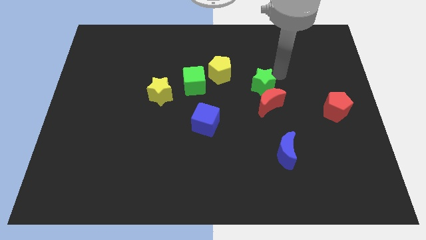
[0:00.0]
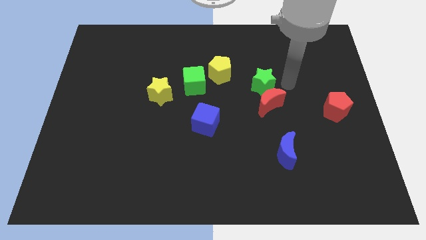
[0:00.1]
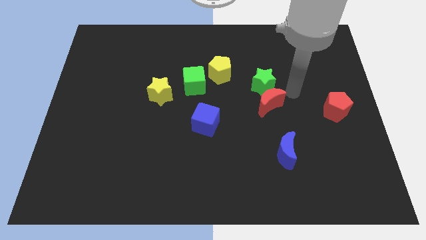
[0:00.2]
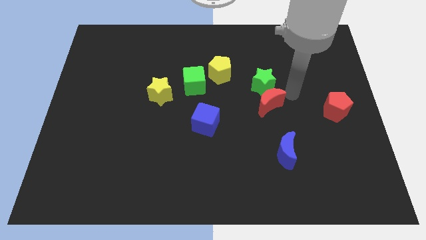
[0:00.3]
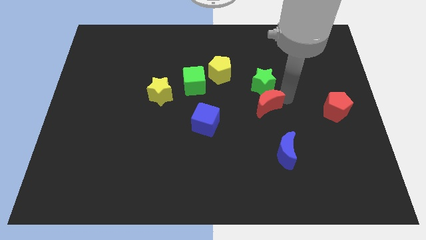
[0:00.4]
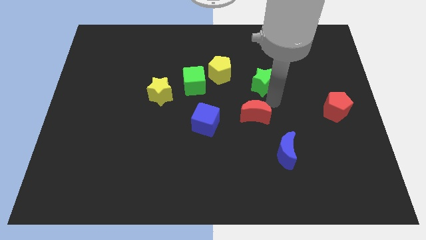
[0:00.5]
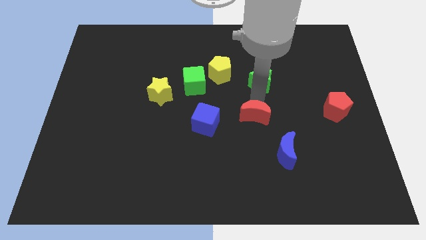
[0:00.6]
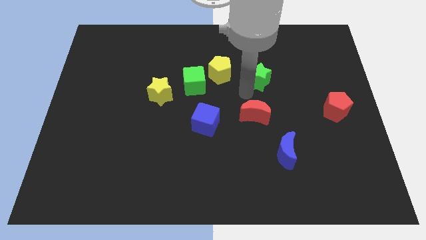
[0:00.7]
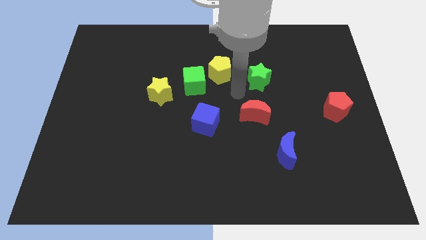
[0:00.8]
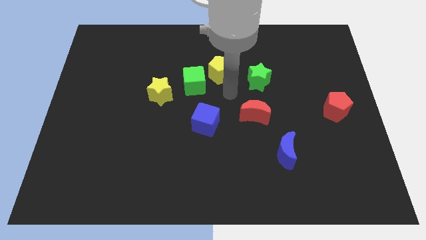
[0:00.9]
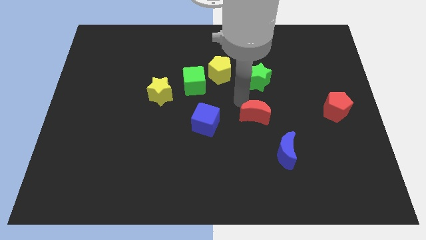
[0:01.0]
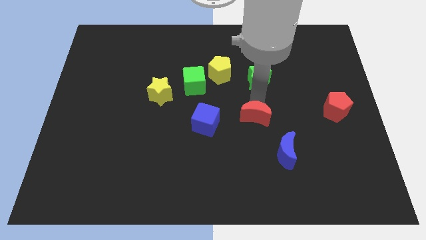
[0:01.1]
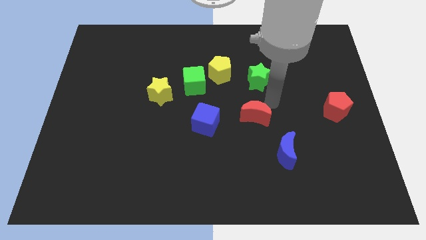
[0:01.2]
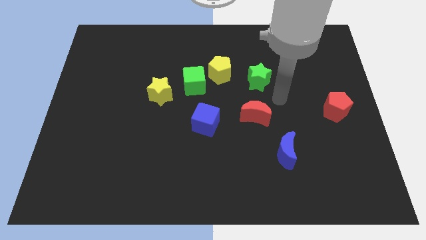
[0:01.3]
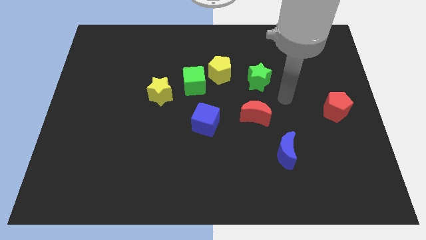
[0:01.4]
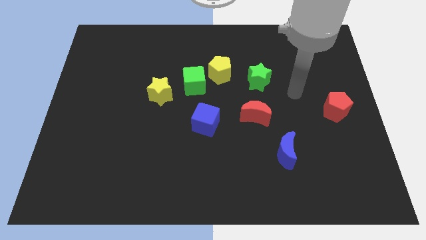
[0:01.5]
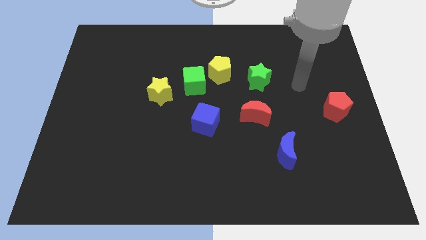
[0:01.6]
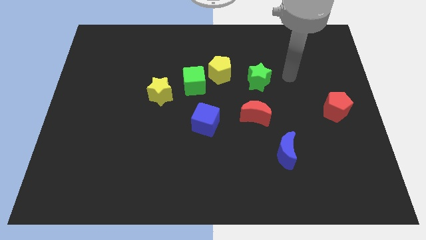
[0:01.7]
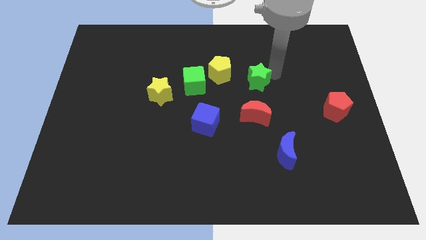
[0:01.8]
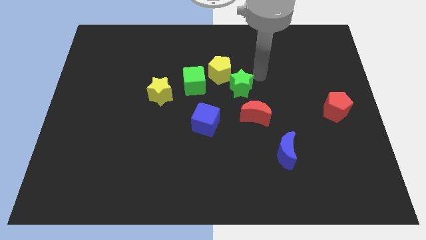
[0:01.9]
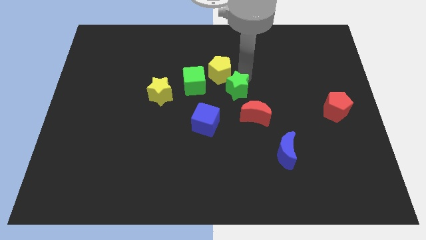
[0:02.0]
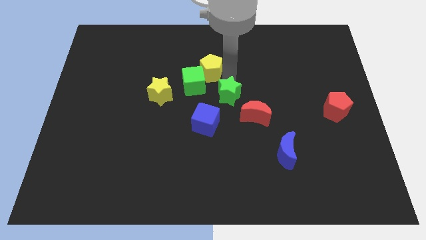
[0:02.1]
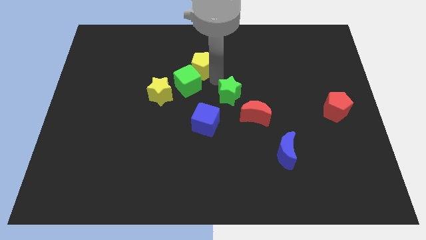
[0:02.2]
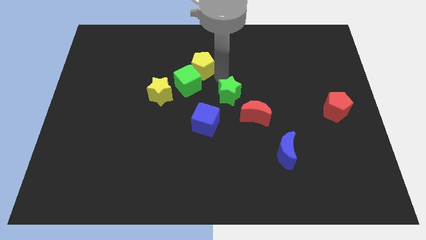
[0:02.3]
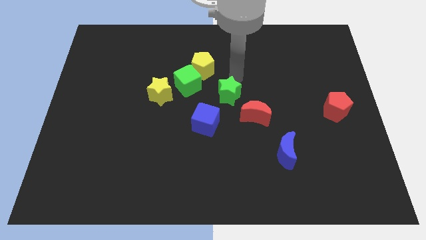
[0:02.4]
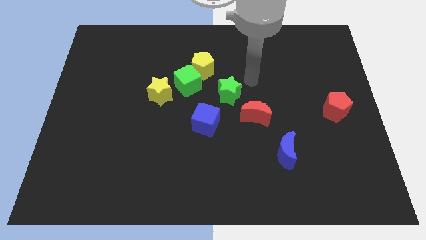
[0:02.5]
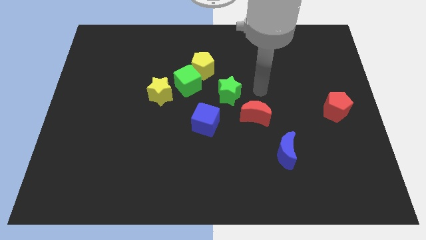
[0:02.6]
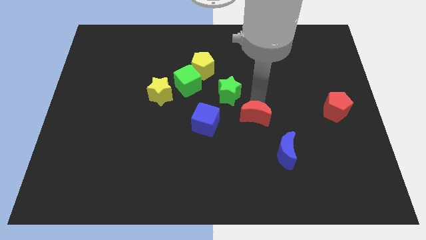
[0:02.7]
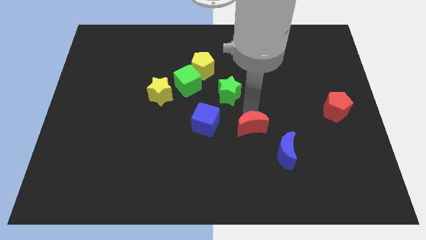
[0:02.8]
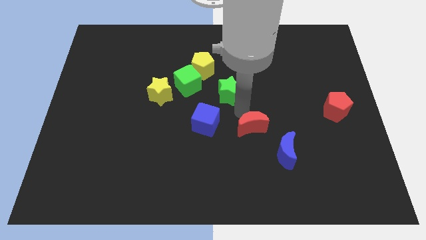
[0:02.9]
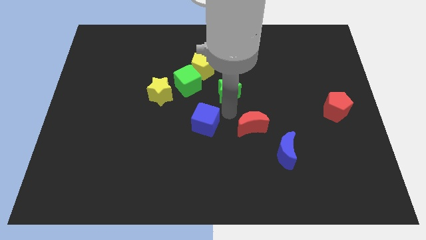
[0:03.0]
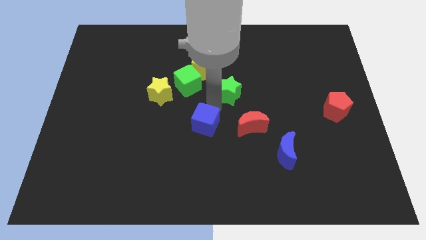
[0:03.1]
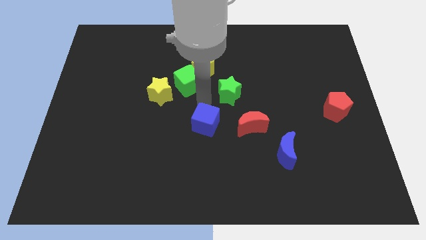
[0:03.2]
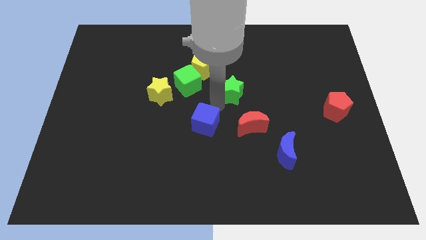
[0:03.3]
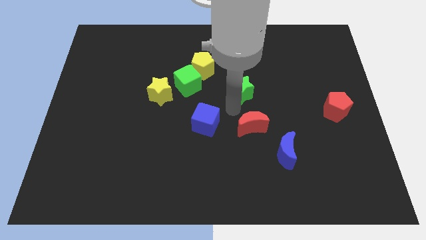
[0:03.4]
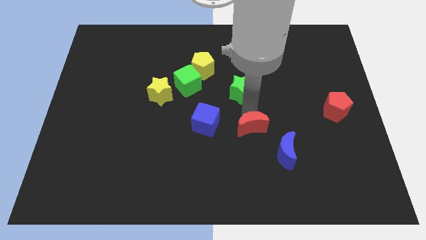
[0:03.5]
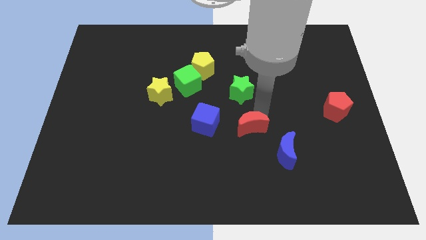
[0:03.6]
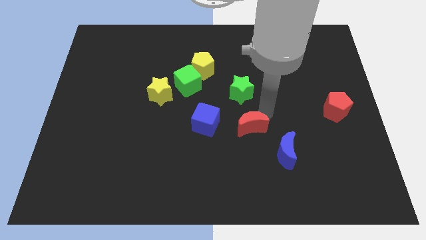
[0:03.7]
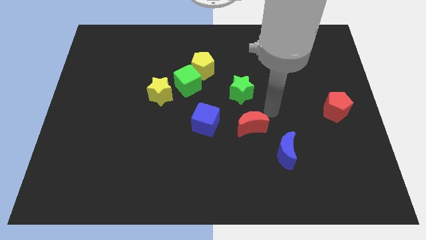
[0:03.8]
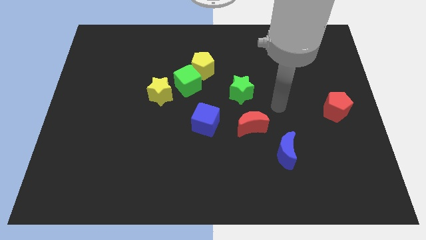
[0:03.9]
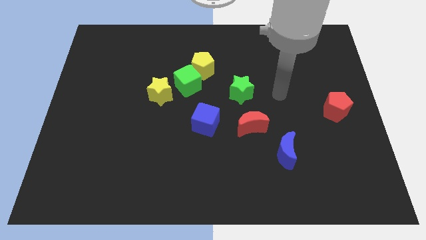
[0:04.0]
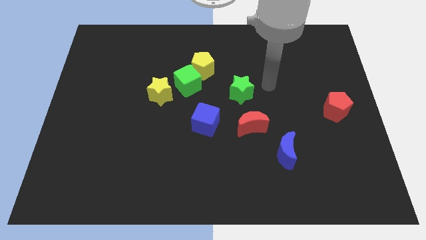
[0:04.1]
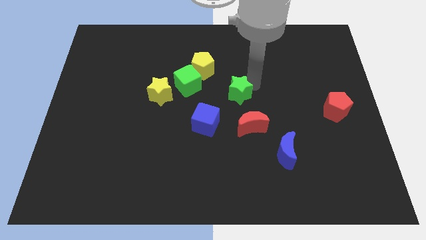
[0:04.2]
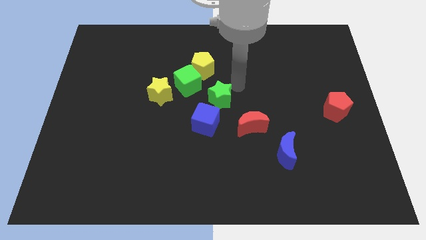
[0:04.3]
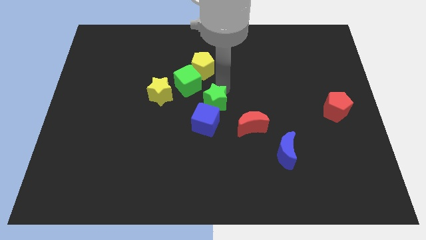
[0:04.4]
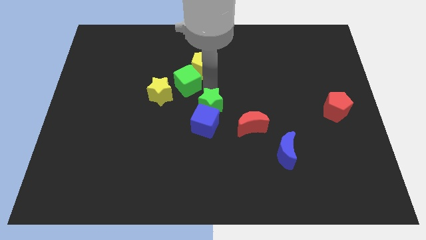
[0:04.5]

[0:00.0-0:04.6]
slide green star and the red moon diagonal to each other

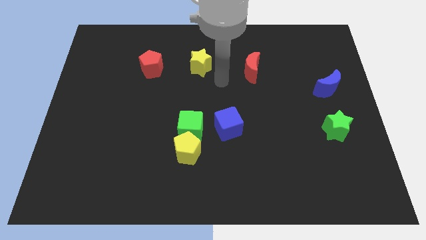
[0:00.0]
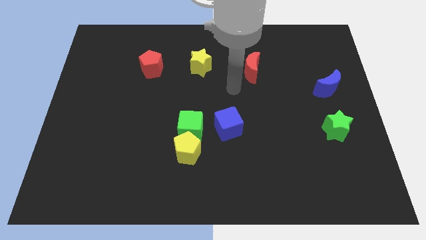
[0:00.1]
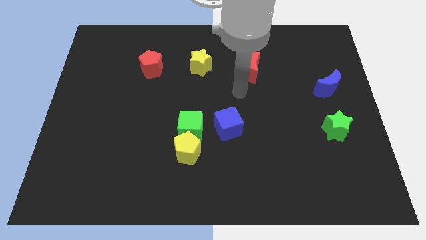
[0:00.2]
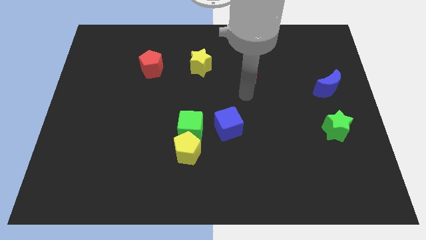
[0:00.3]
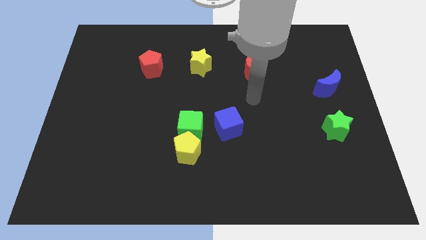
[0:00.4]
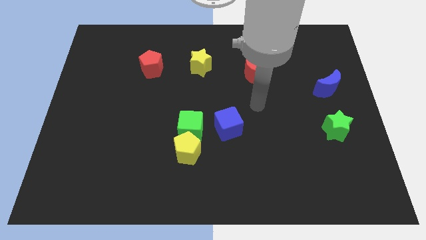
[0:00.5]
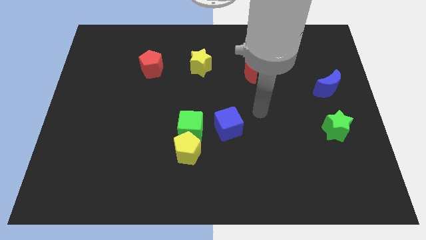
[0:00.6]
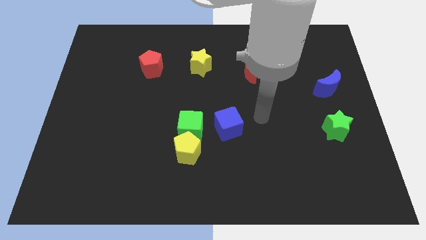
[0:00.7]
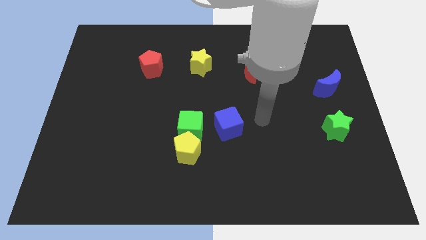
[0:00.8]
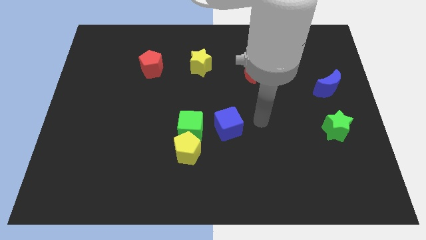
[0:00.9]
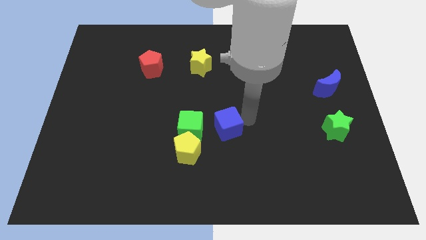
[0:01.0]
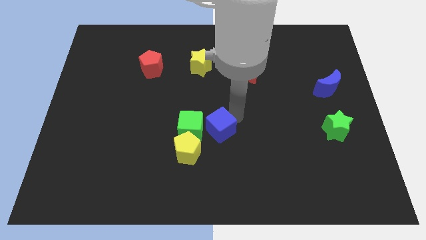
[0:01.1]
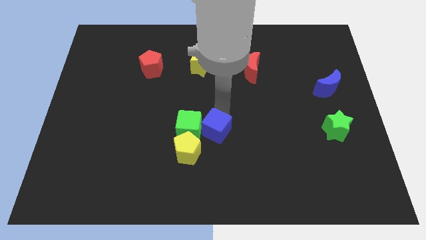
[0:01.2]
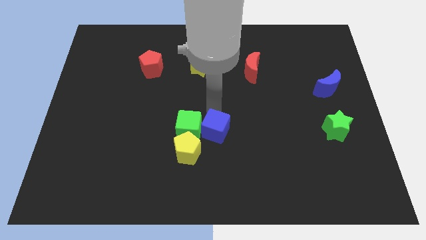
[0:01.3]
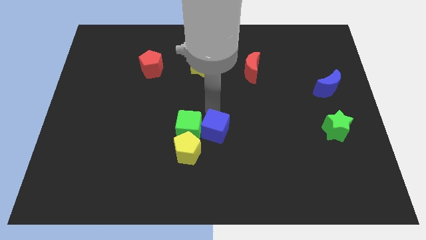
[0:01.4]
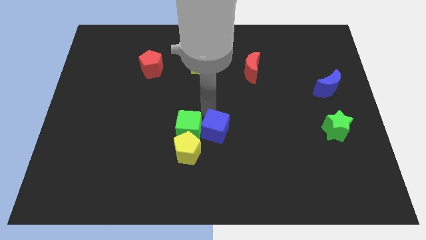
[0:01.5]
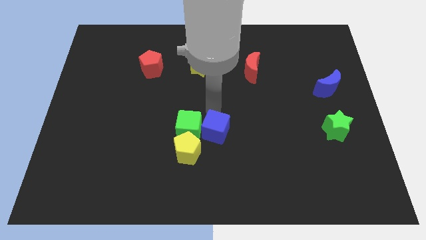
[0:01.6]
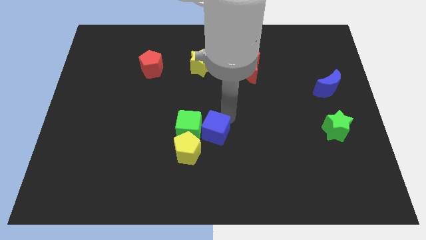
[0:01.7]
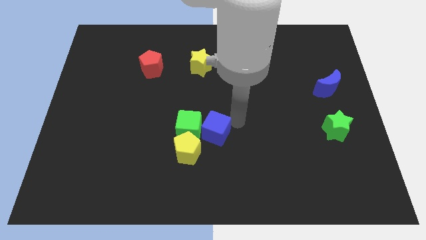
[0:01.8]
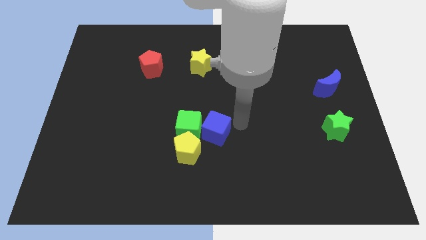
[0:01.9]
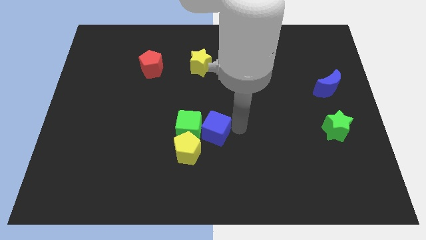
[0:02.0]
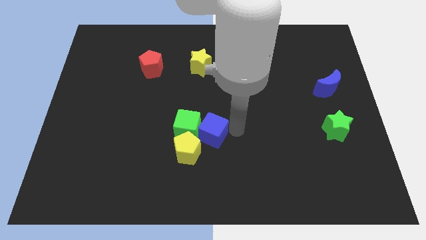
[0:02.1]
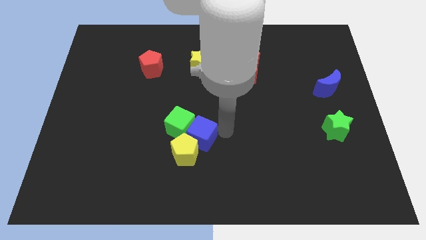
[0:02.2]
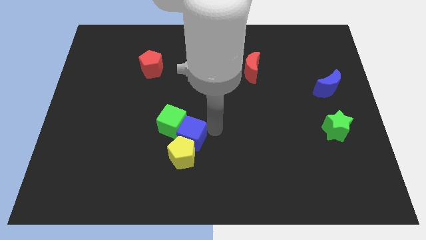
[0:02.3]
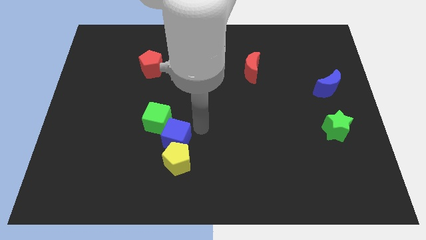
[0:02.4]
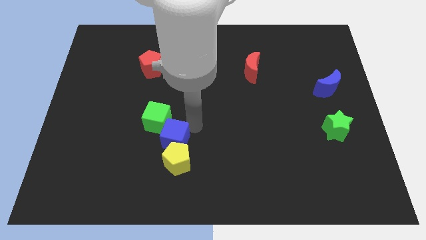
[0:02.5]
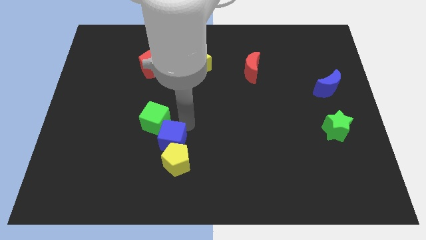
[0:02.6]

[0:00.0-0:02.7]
push the blue cube into the green cube

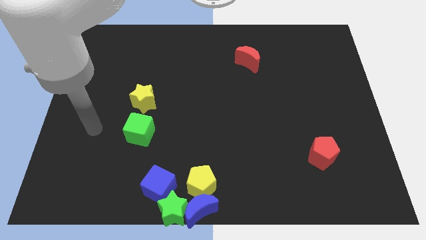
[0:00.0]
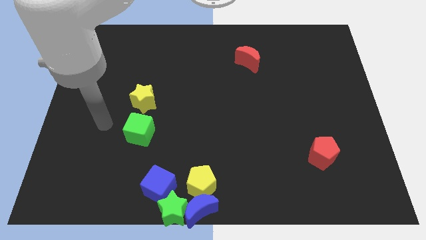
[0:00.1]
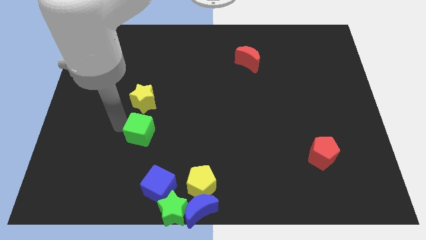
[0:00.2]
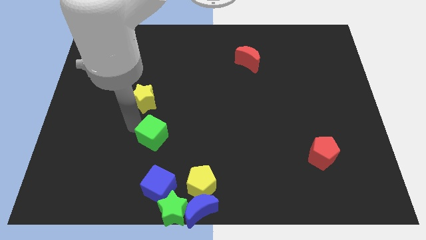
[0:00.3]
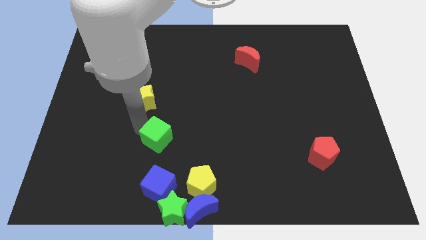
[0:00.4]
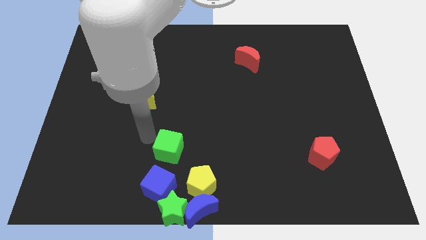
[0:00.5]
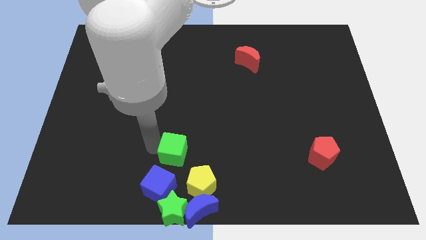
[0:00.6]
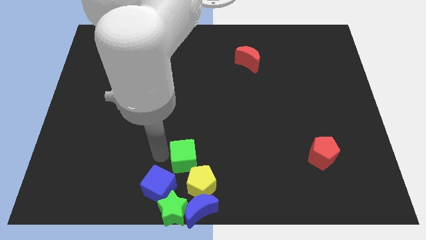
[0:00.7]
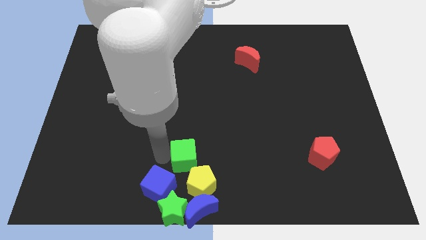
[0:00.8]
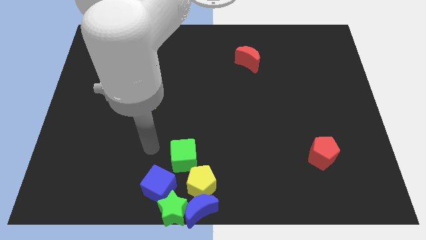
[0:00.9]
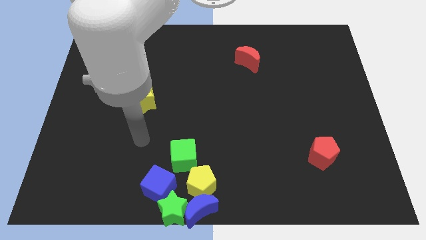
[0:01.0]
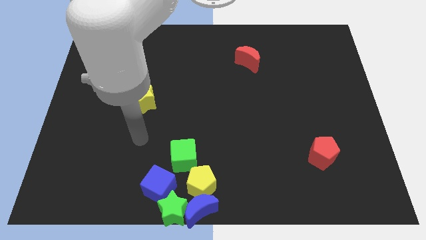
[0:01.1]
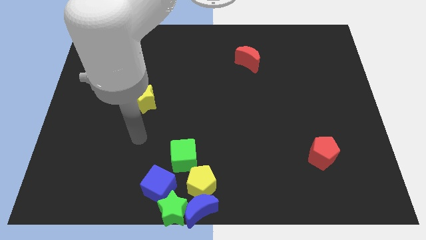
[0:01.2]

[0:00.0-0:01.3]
move the green cube into the yellow pentagon

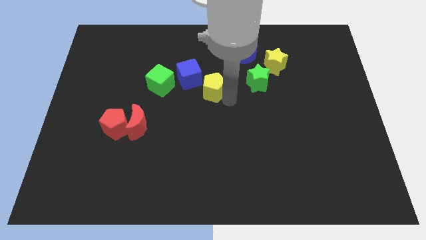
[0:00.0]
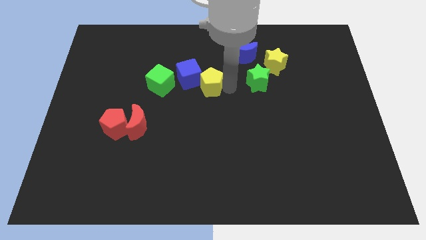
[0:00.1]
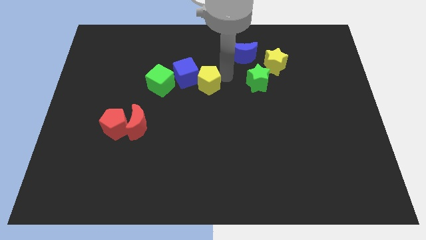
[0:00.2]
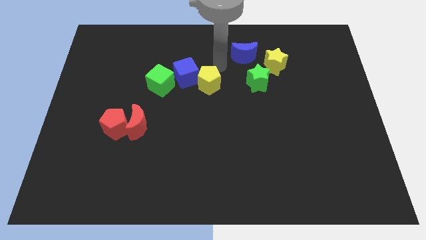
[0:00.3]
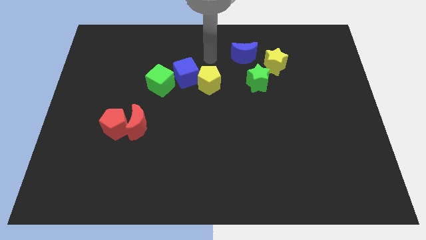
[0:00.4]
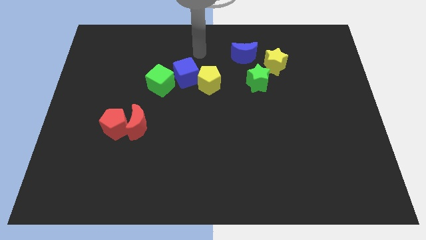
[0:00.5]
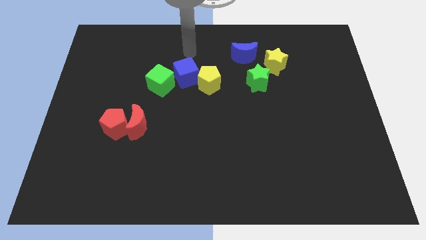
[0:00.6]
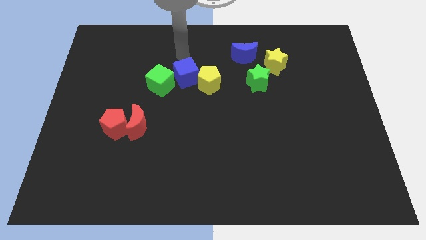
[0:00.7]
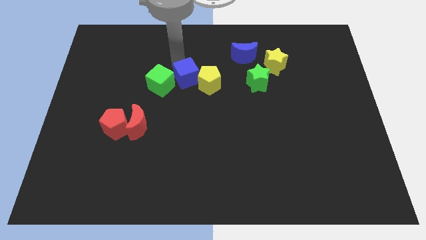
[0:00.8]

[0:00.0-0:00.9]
move your arm to the top of blue cube
